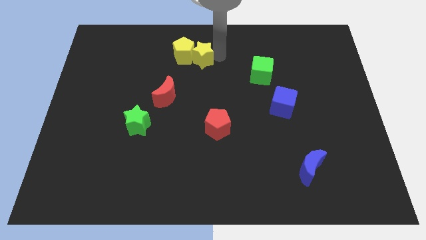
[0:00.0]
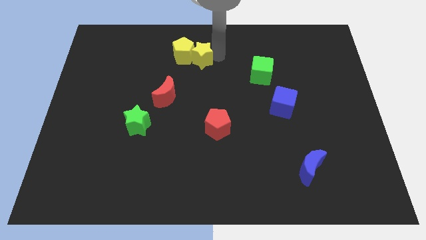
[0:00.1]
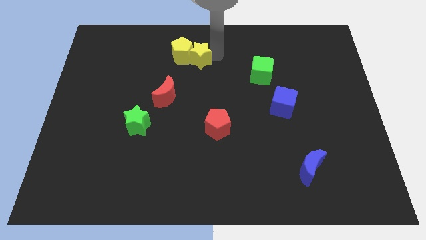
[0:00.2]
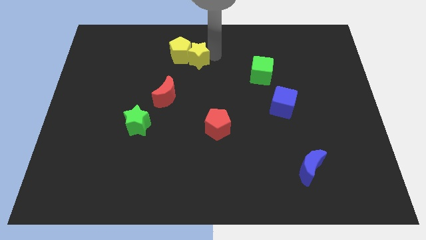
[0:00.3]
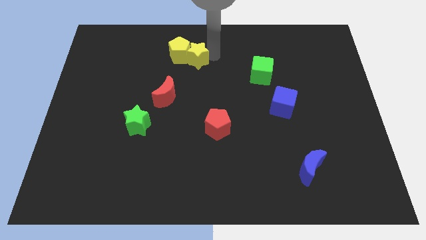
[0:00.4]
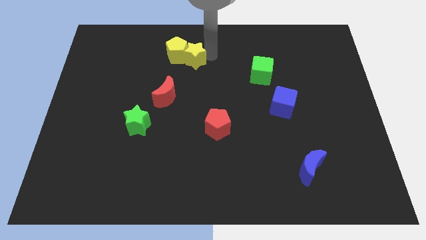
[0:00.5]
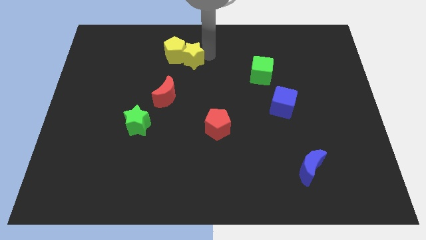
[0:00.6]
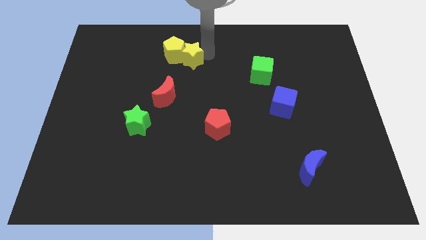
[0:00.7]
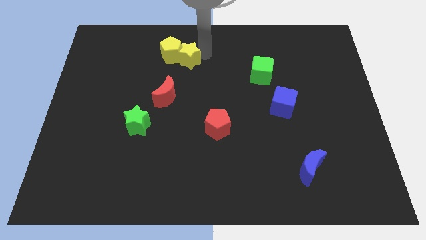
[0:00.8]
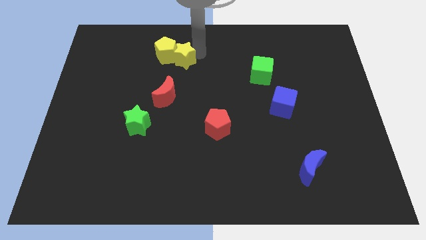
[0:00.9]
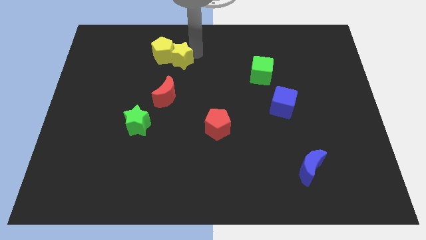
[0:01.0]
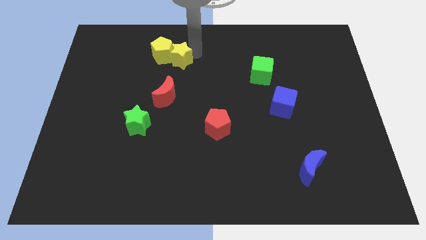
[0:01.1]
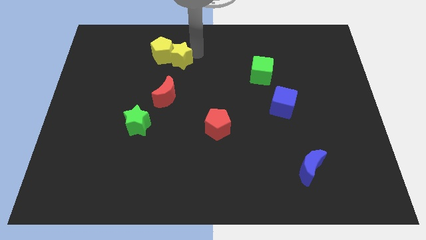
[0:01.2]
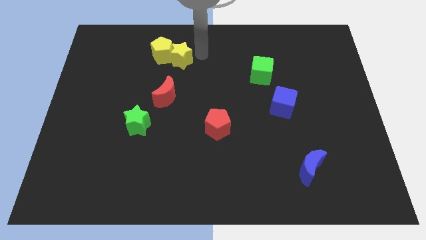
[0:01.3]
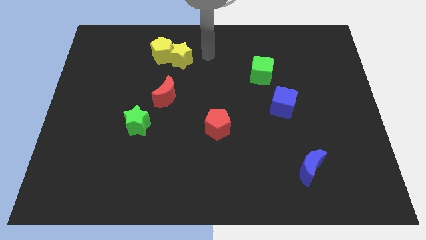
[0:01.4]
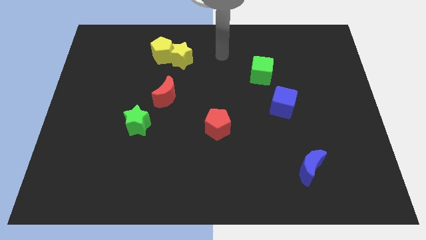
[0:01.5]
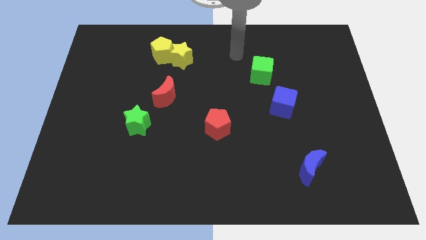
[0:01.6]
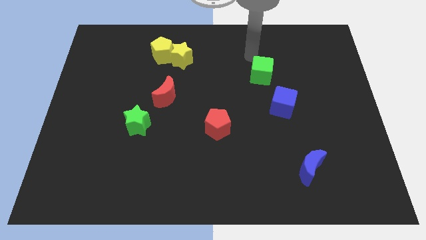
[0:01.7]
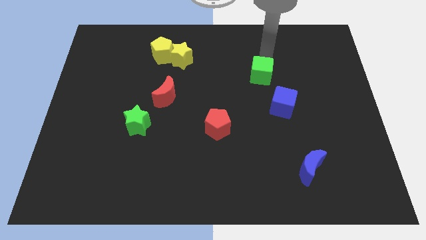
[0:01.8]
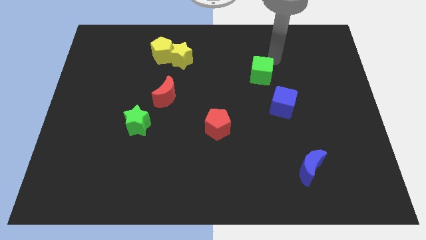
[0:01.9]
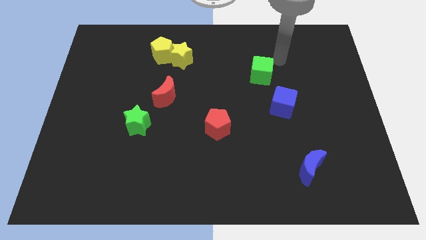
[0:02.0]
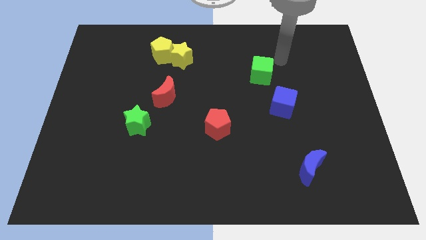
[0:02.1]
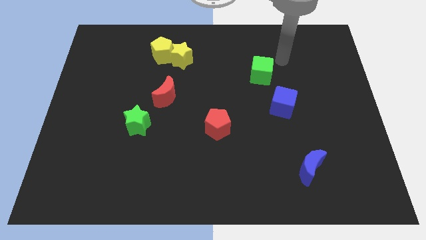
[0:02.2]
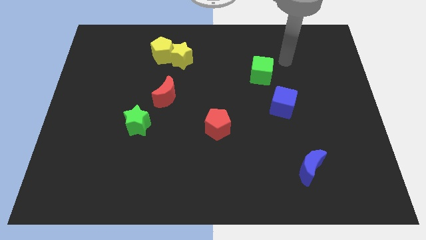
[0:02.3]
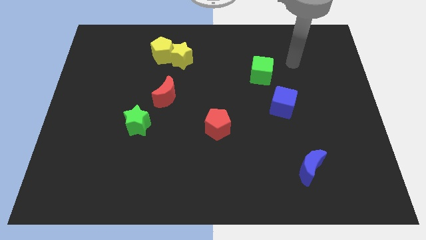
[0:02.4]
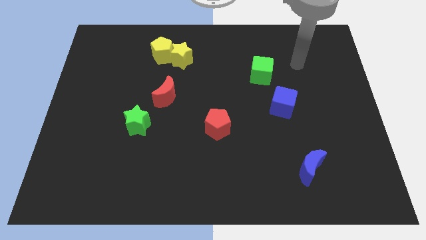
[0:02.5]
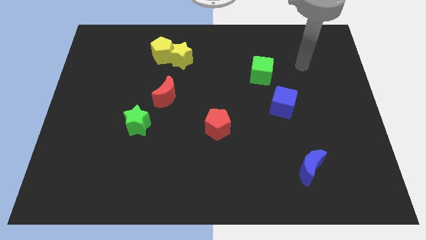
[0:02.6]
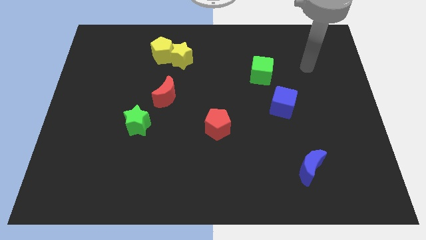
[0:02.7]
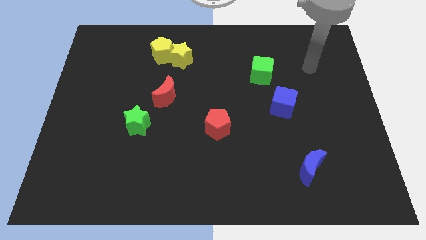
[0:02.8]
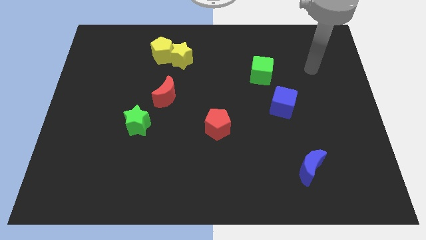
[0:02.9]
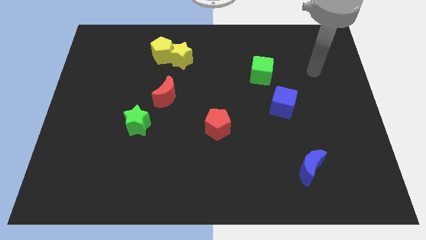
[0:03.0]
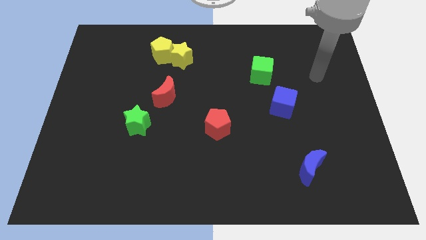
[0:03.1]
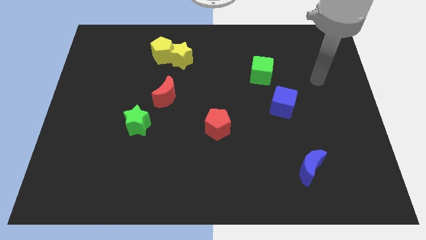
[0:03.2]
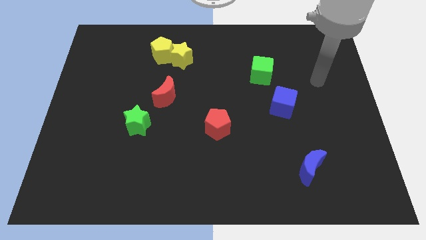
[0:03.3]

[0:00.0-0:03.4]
move your arm away from yellow star

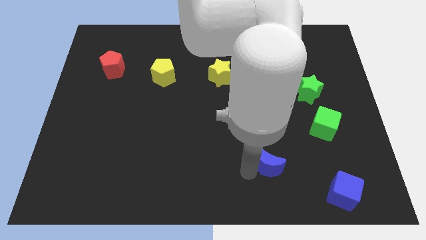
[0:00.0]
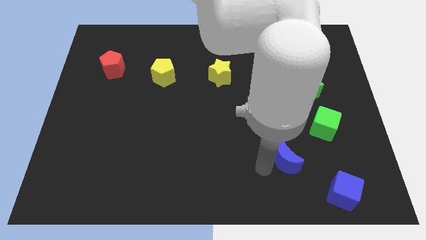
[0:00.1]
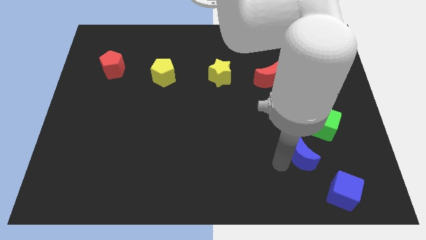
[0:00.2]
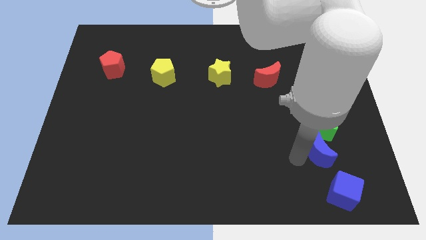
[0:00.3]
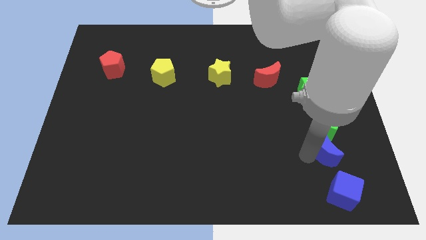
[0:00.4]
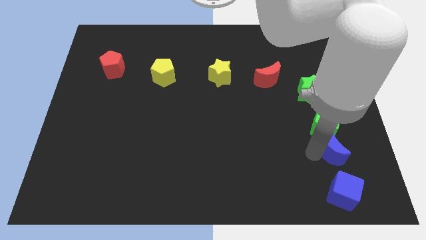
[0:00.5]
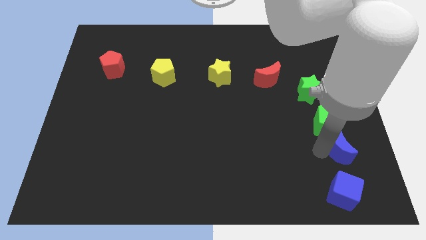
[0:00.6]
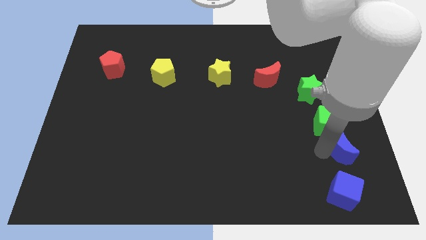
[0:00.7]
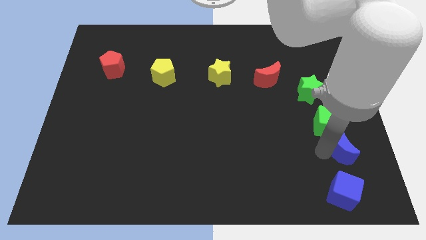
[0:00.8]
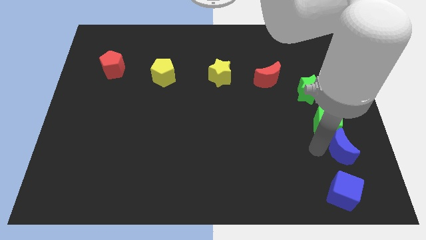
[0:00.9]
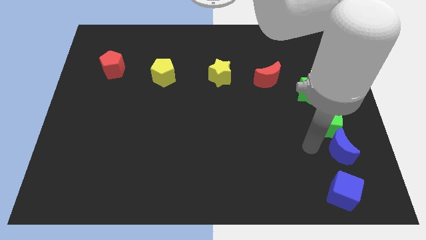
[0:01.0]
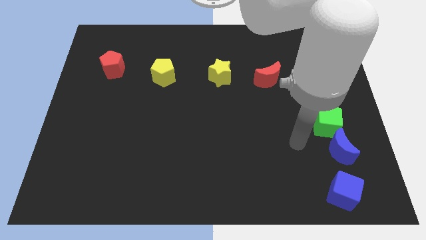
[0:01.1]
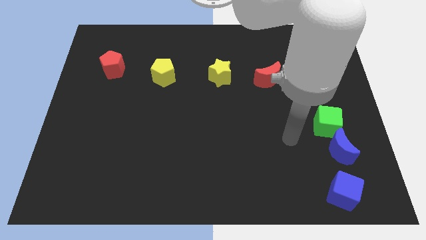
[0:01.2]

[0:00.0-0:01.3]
place the blue crescent in between the green cube and the blue cube

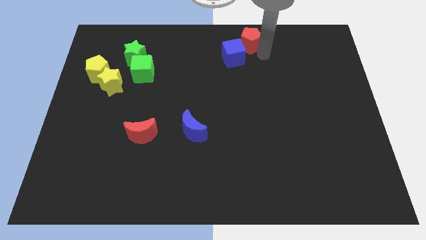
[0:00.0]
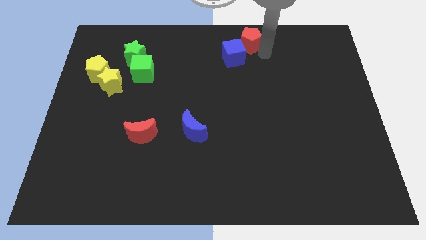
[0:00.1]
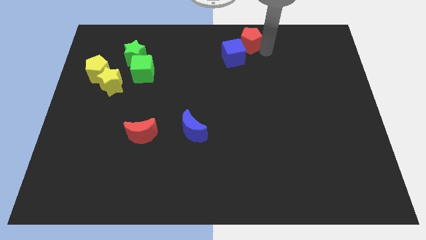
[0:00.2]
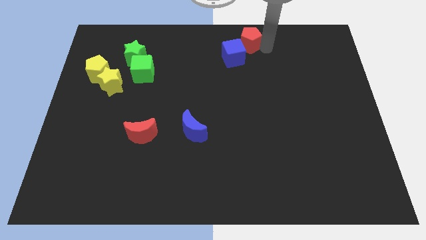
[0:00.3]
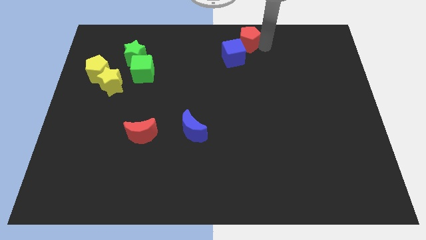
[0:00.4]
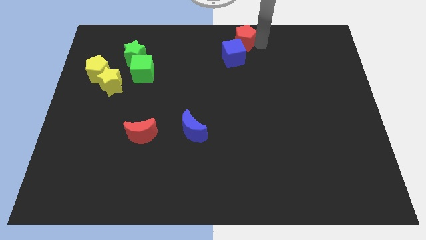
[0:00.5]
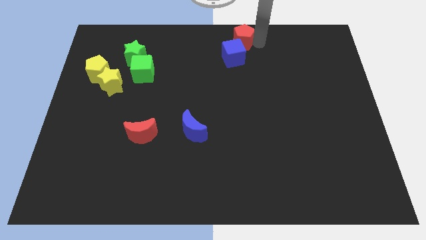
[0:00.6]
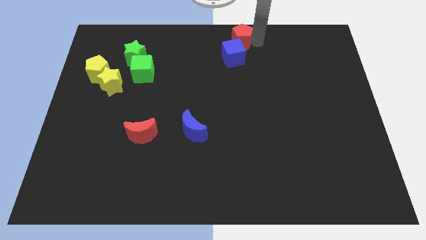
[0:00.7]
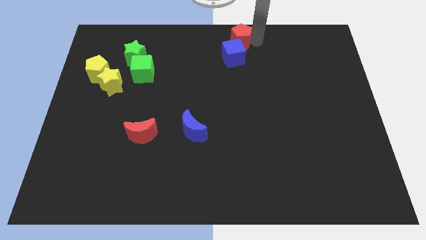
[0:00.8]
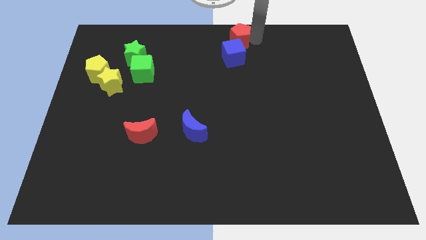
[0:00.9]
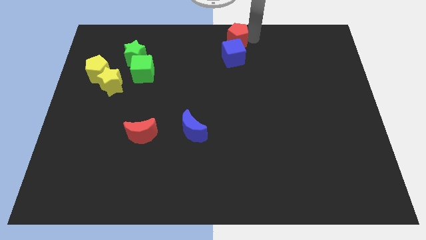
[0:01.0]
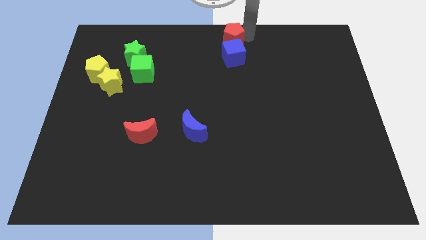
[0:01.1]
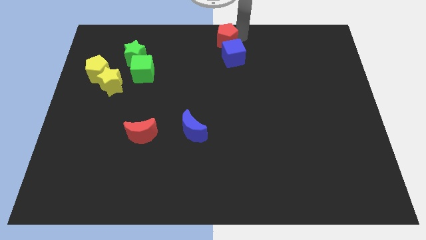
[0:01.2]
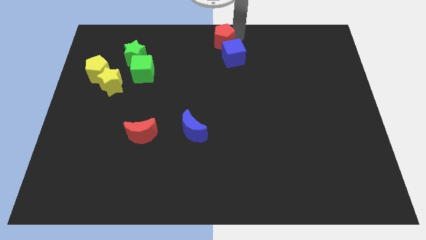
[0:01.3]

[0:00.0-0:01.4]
move the red pentagon to the top center of the board

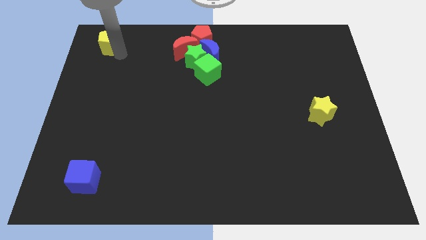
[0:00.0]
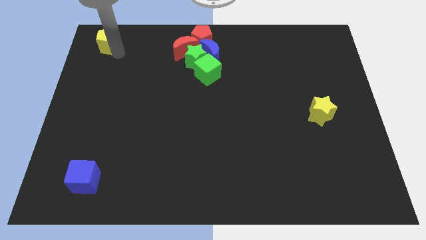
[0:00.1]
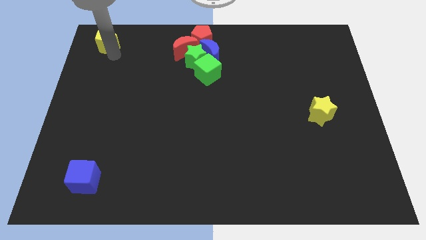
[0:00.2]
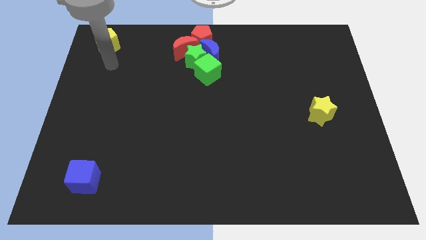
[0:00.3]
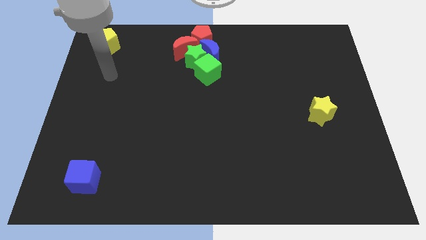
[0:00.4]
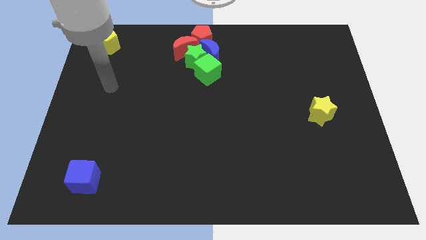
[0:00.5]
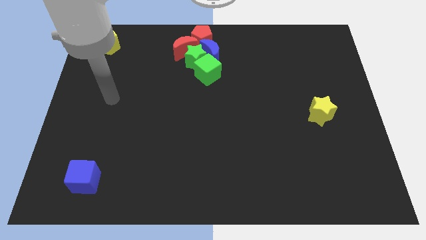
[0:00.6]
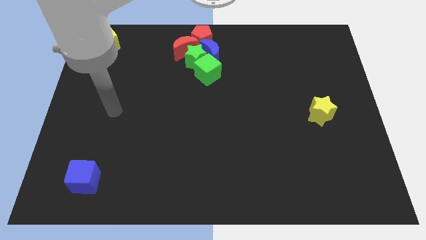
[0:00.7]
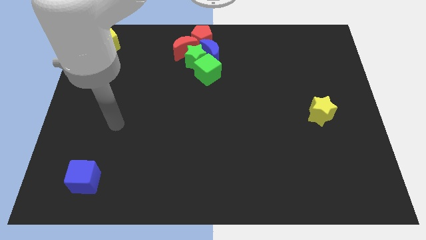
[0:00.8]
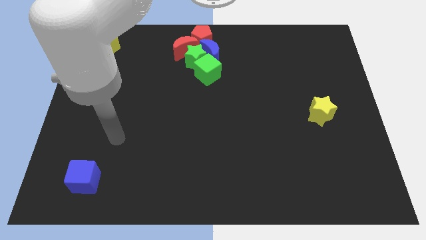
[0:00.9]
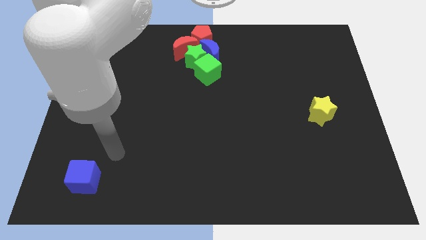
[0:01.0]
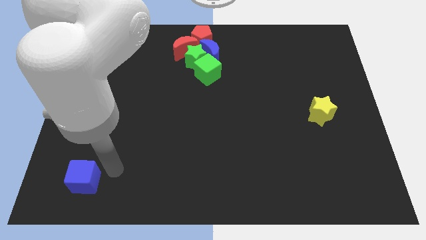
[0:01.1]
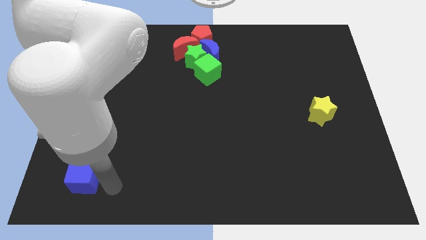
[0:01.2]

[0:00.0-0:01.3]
place your arm to the right of the blue cube

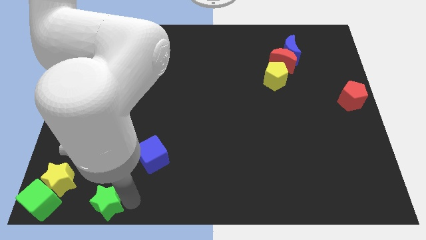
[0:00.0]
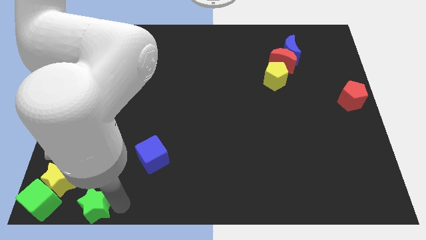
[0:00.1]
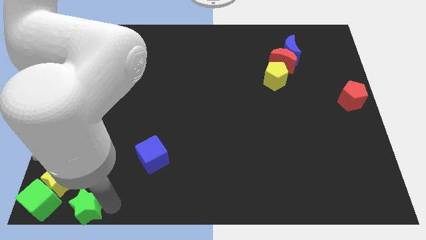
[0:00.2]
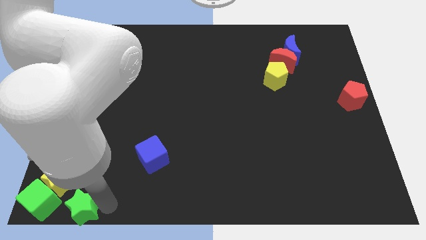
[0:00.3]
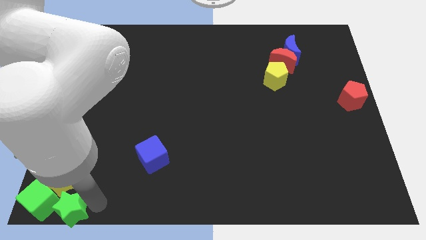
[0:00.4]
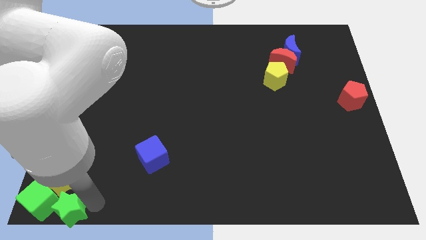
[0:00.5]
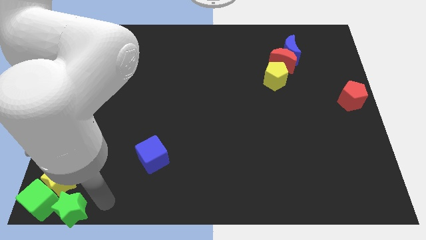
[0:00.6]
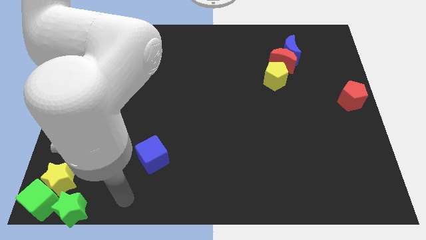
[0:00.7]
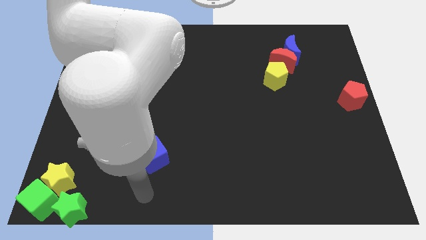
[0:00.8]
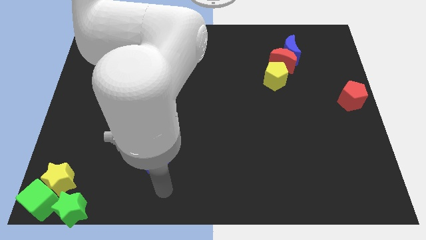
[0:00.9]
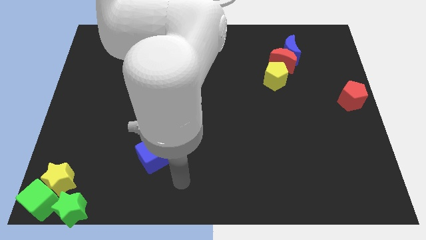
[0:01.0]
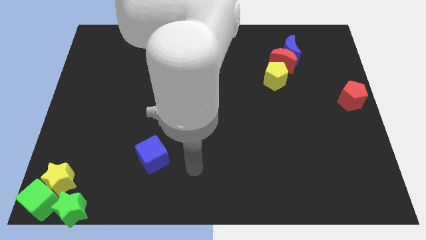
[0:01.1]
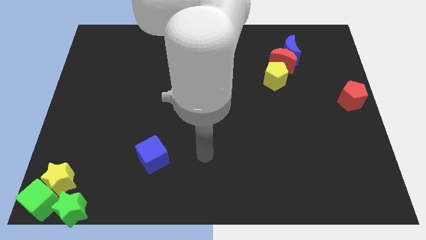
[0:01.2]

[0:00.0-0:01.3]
place green star to the right side of green cube

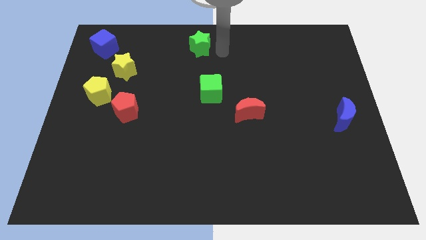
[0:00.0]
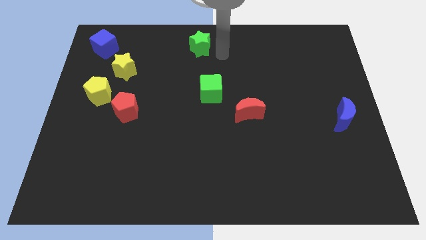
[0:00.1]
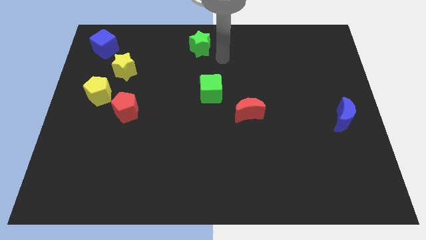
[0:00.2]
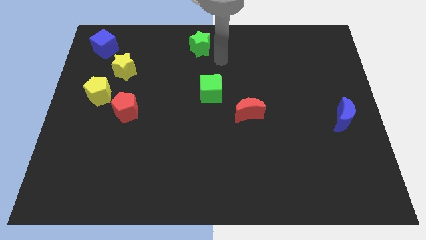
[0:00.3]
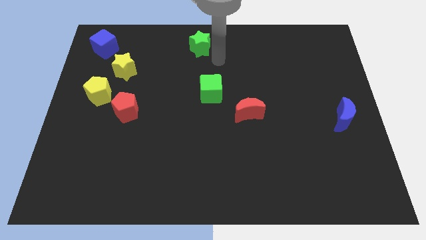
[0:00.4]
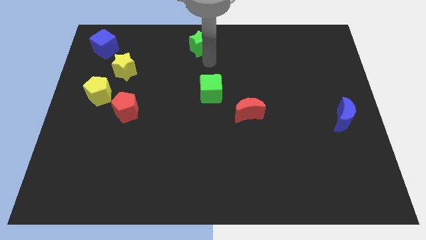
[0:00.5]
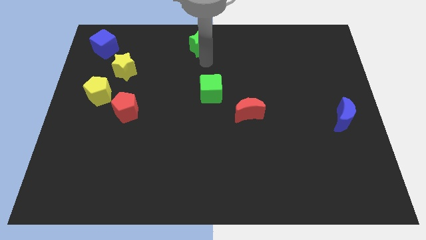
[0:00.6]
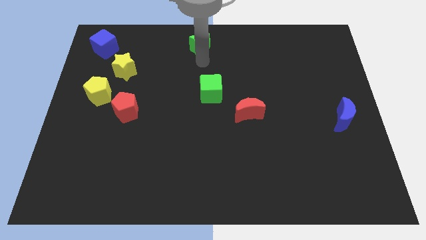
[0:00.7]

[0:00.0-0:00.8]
point your arm in between the green star and green cube
